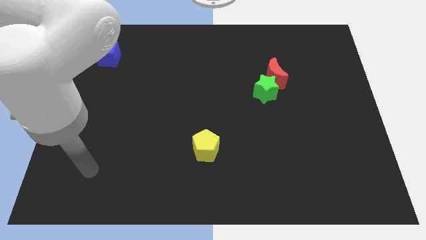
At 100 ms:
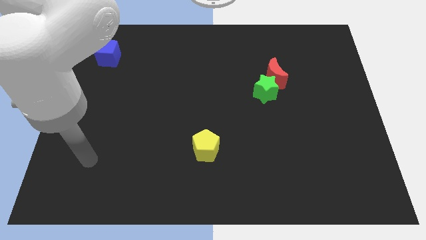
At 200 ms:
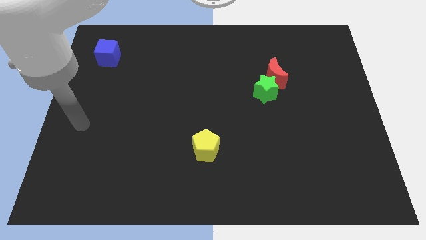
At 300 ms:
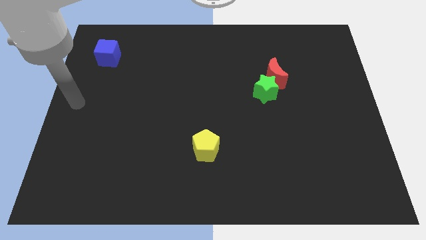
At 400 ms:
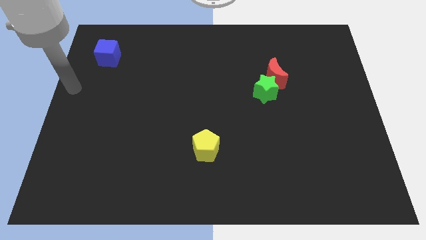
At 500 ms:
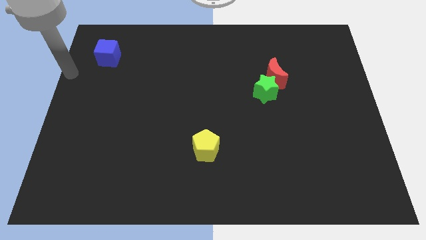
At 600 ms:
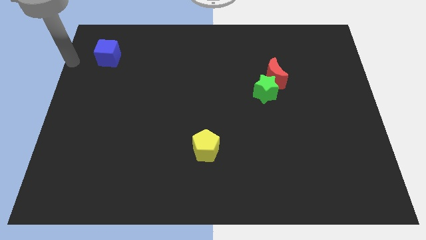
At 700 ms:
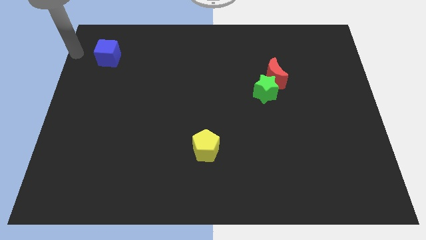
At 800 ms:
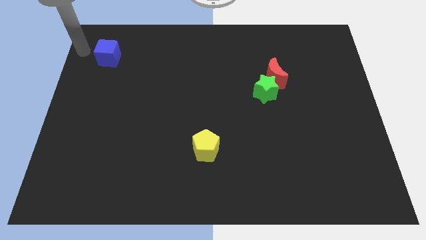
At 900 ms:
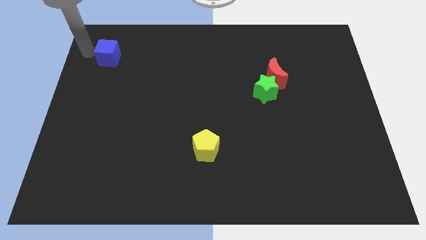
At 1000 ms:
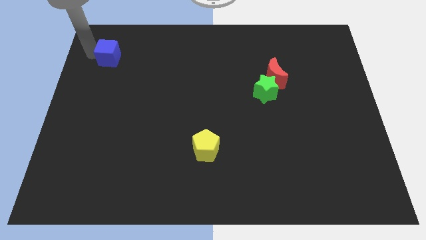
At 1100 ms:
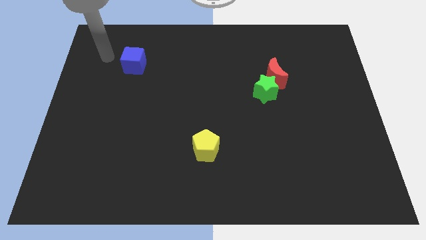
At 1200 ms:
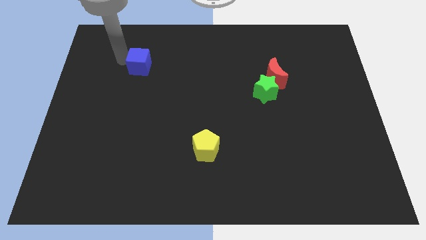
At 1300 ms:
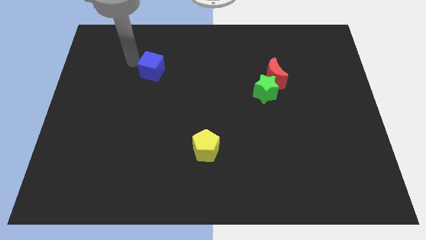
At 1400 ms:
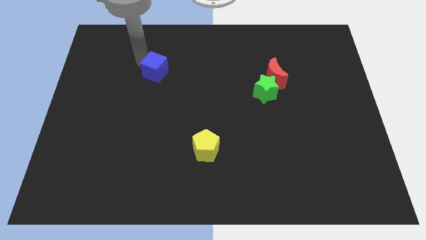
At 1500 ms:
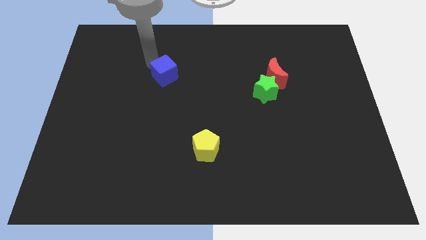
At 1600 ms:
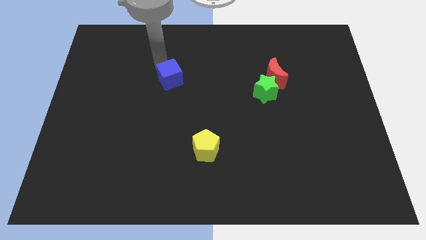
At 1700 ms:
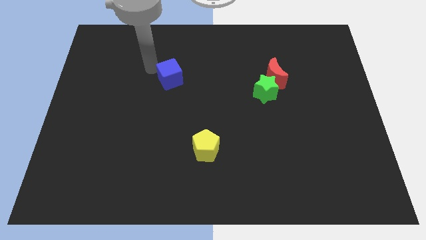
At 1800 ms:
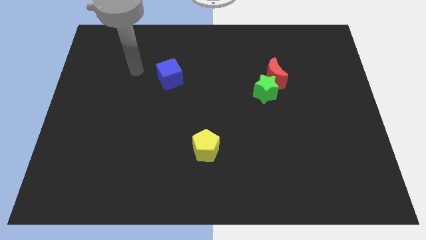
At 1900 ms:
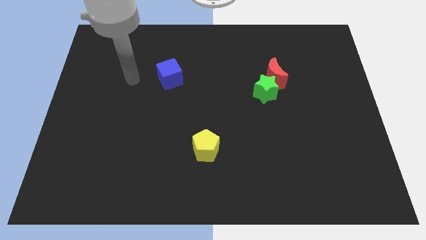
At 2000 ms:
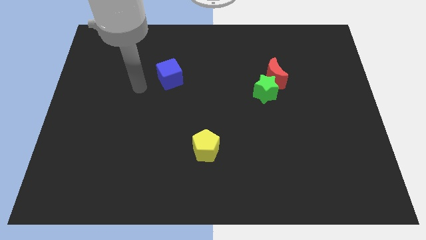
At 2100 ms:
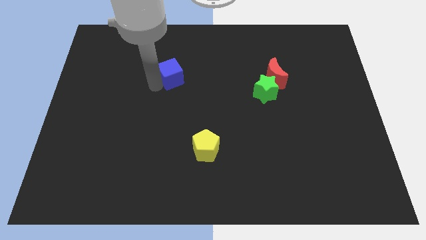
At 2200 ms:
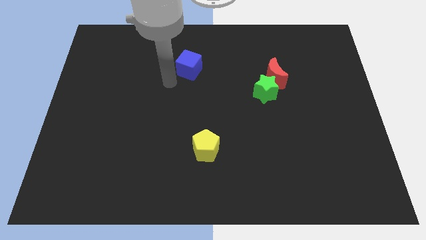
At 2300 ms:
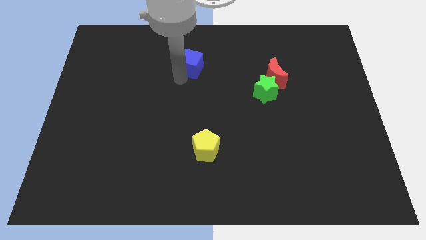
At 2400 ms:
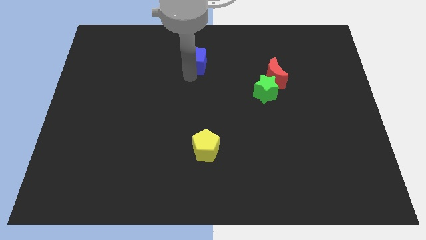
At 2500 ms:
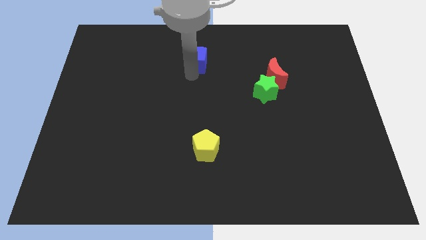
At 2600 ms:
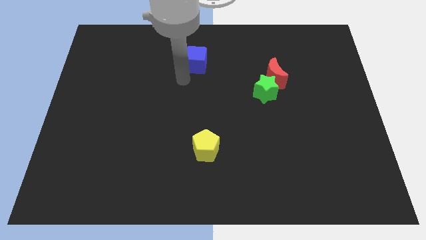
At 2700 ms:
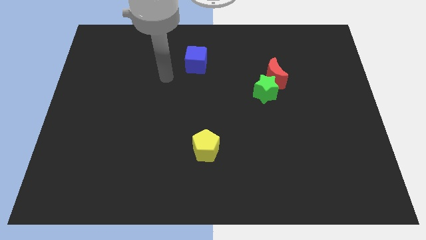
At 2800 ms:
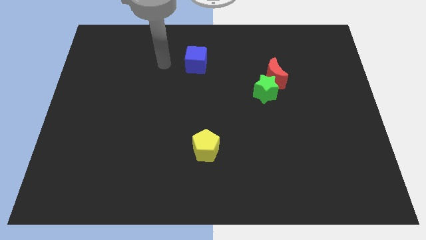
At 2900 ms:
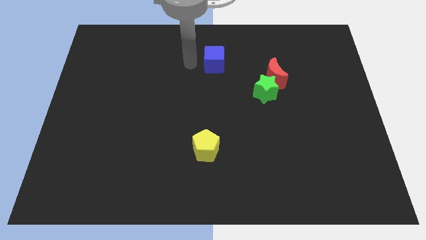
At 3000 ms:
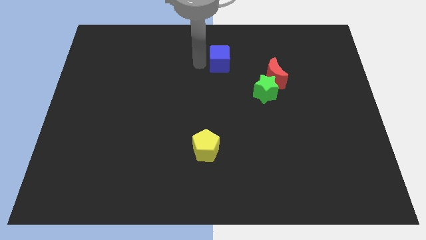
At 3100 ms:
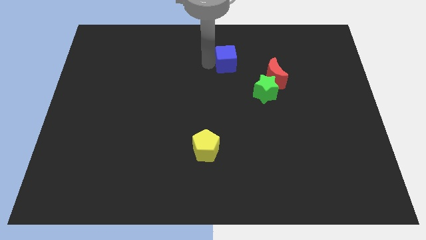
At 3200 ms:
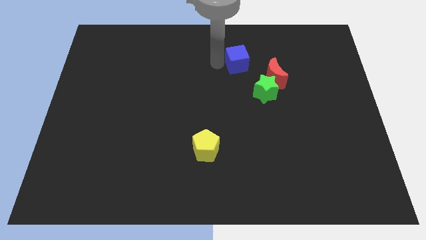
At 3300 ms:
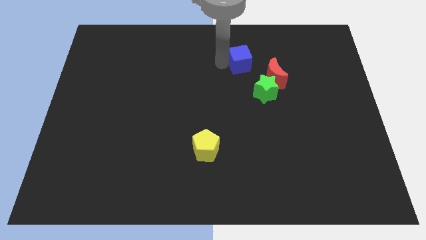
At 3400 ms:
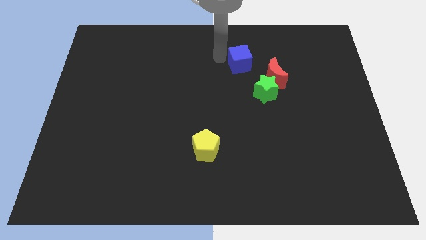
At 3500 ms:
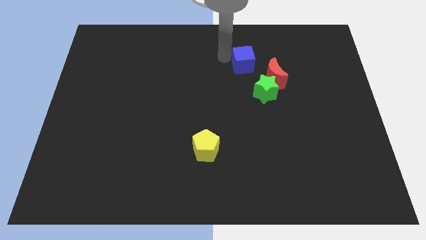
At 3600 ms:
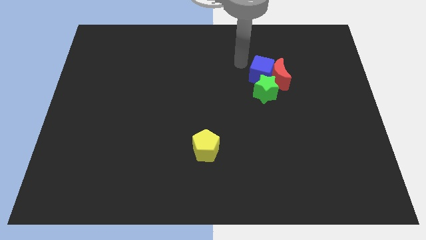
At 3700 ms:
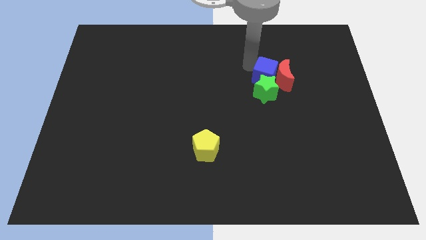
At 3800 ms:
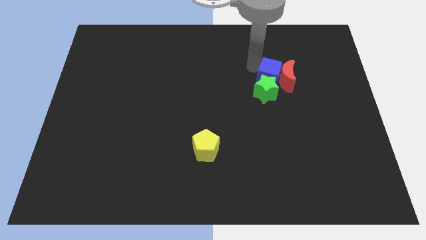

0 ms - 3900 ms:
slide the blue cube to the red block

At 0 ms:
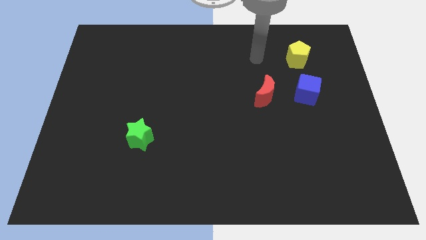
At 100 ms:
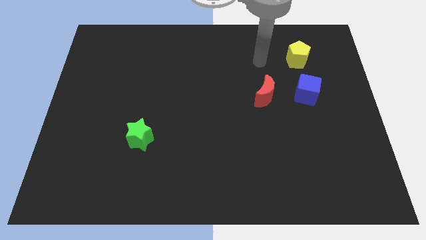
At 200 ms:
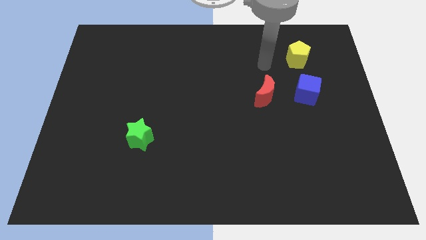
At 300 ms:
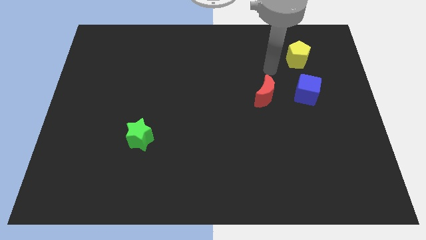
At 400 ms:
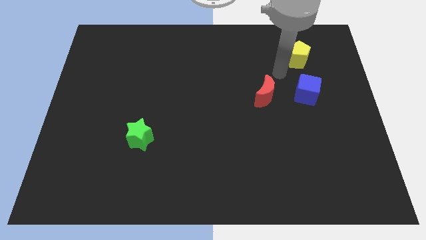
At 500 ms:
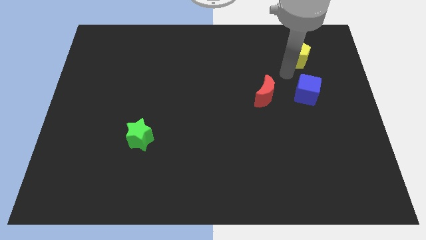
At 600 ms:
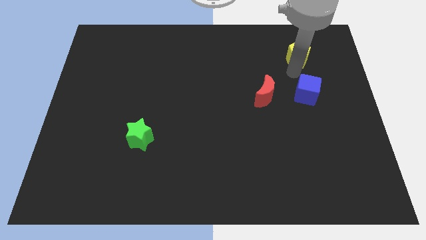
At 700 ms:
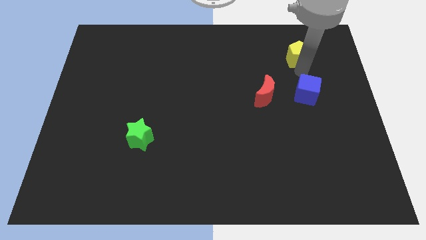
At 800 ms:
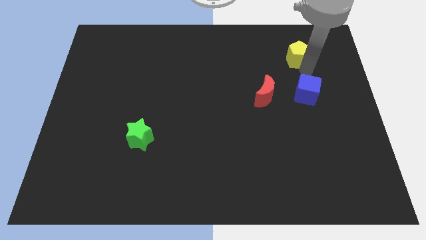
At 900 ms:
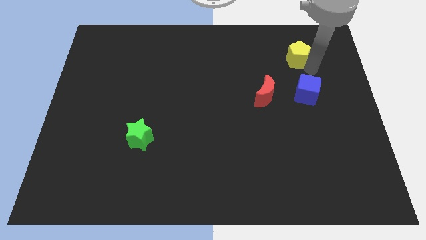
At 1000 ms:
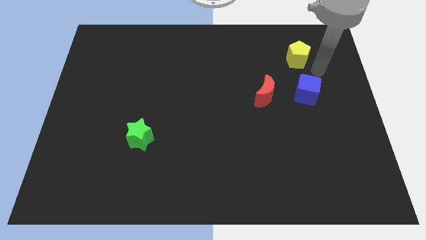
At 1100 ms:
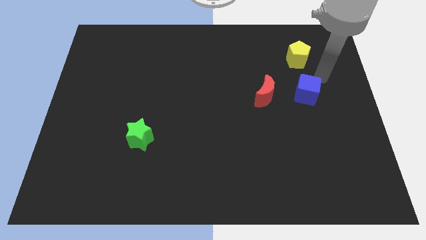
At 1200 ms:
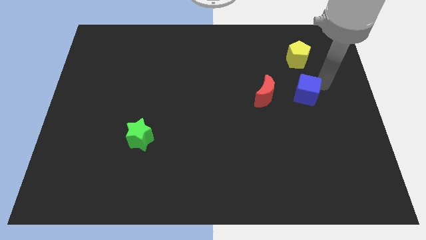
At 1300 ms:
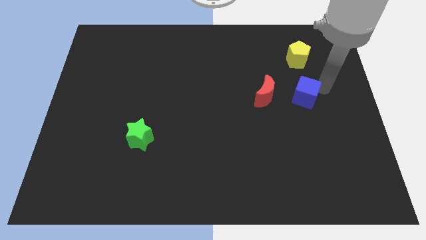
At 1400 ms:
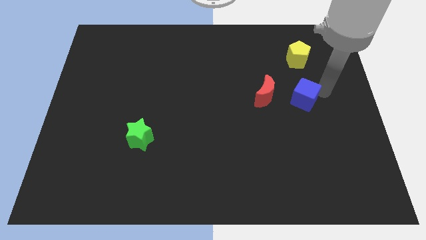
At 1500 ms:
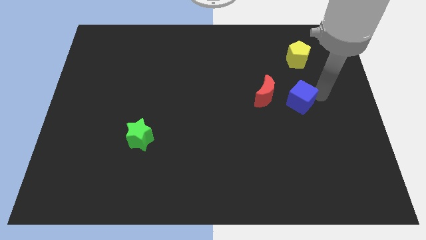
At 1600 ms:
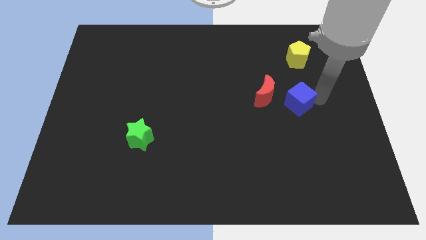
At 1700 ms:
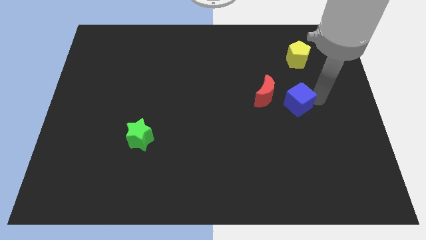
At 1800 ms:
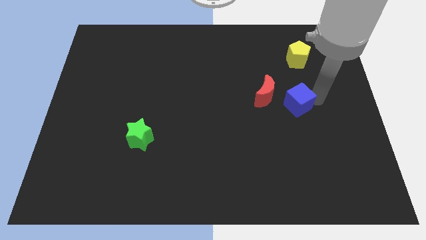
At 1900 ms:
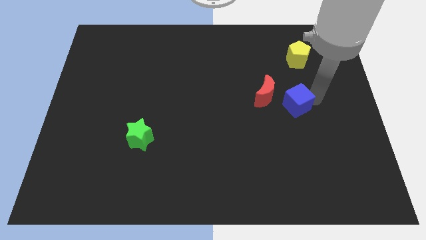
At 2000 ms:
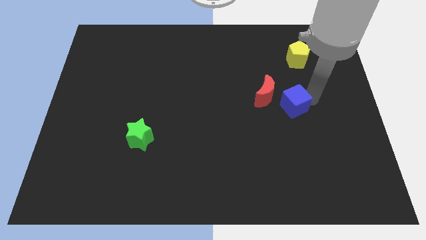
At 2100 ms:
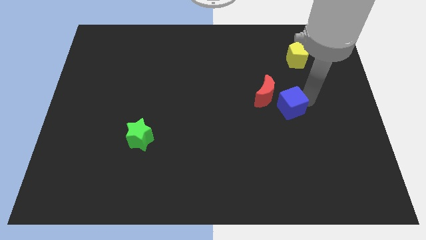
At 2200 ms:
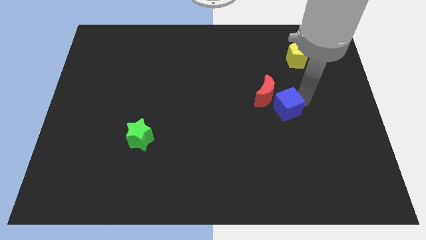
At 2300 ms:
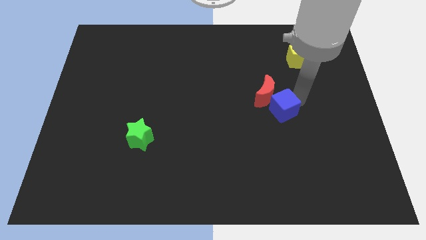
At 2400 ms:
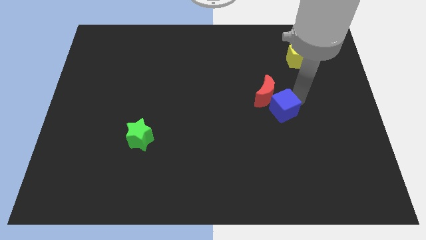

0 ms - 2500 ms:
put the blue cube towards the red moon

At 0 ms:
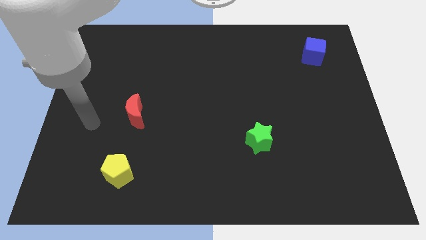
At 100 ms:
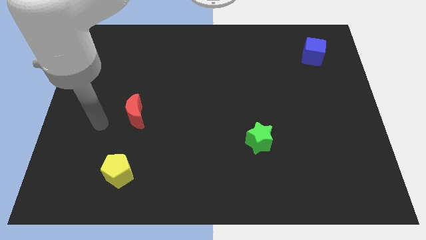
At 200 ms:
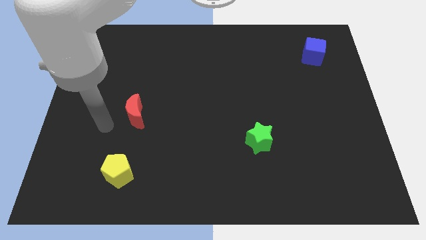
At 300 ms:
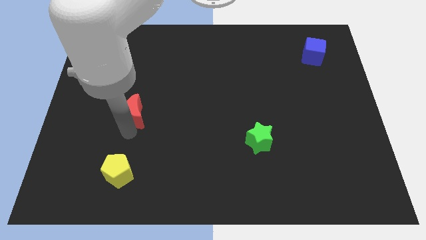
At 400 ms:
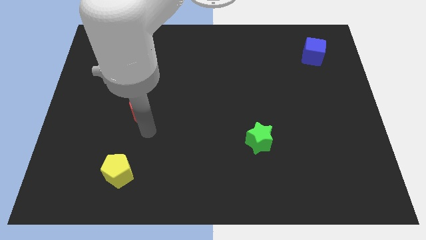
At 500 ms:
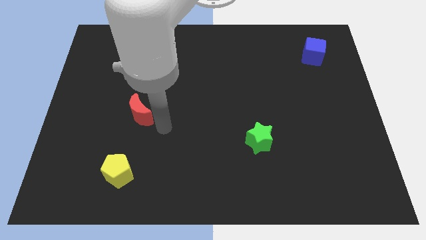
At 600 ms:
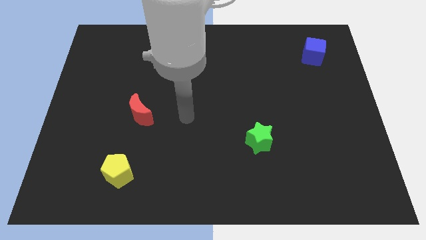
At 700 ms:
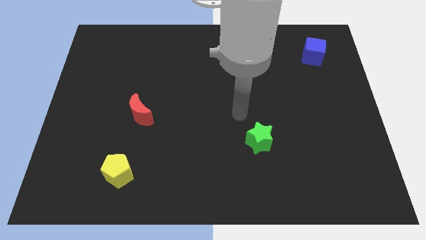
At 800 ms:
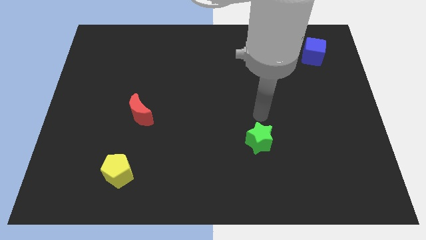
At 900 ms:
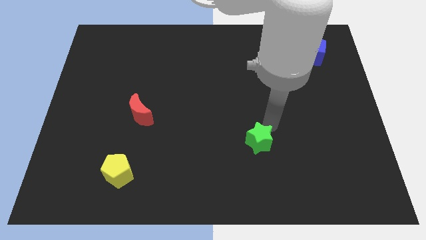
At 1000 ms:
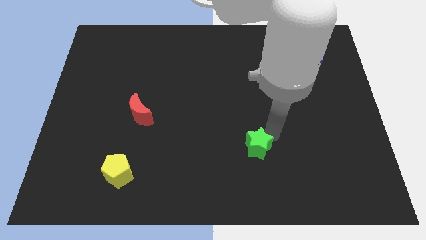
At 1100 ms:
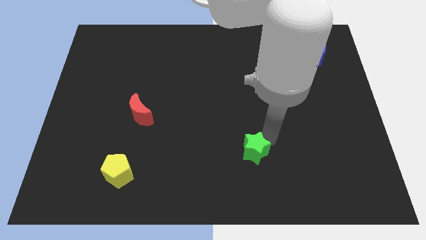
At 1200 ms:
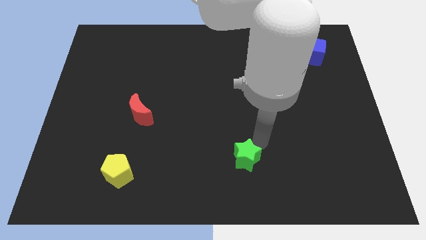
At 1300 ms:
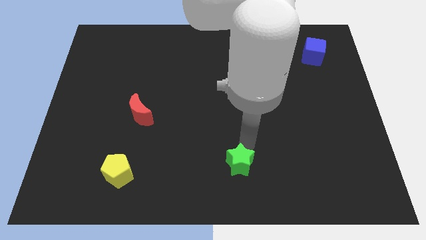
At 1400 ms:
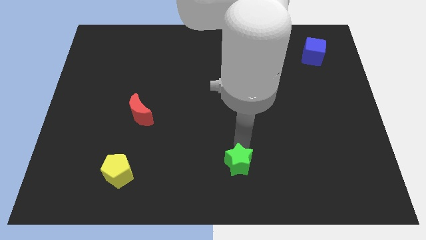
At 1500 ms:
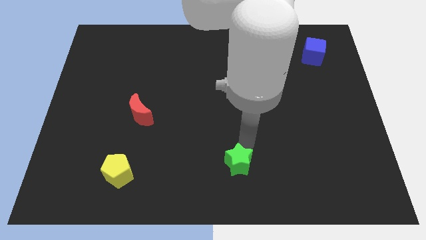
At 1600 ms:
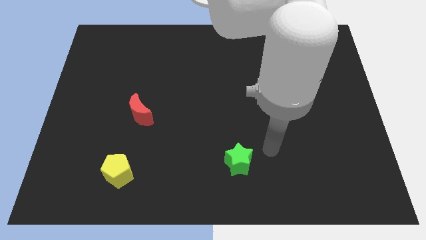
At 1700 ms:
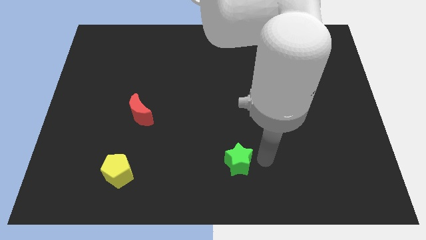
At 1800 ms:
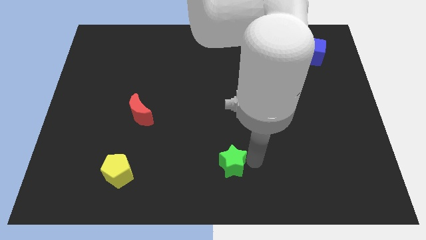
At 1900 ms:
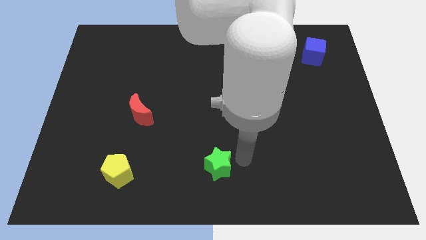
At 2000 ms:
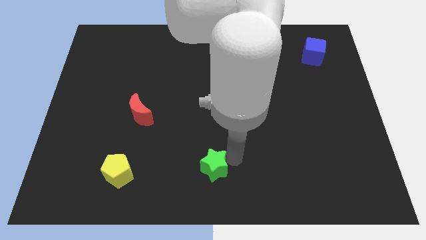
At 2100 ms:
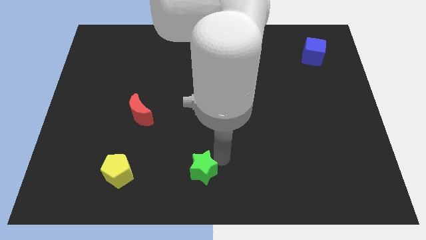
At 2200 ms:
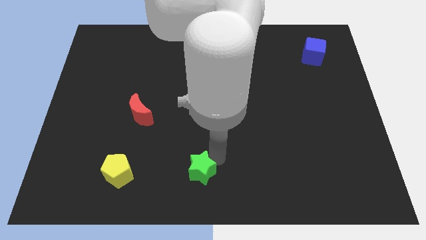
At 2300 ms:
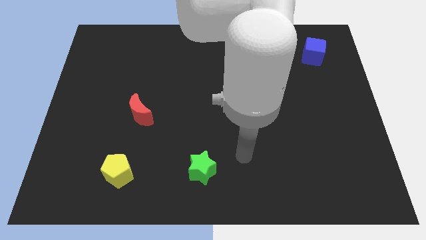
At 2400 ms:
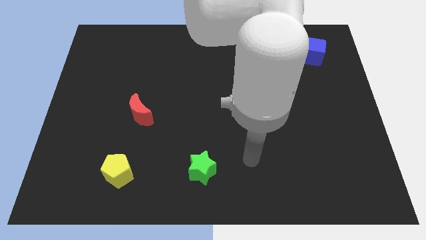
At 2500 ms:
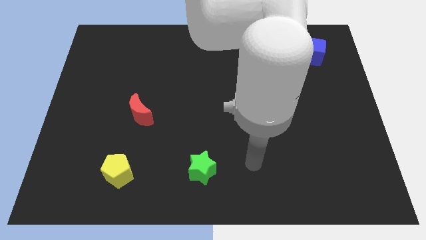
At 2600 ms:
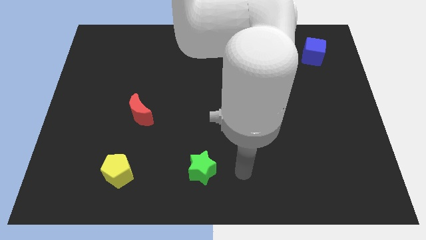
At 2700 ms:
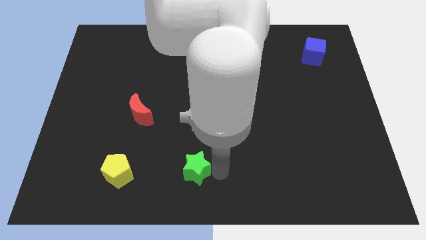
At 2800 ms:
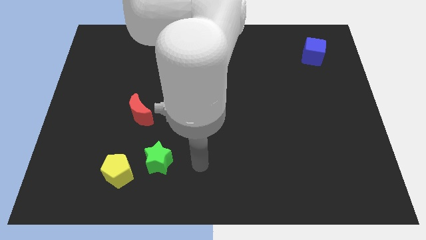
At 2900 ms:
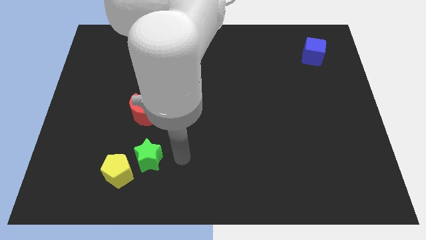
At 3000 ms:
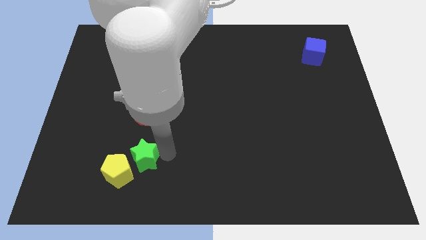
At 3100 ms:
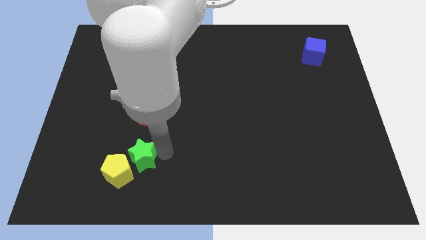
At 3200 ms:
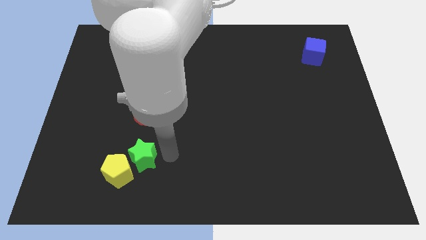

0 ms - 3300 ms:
slide the star close to the yellow pentagon
